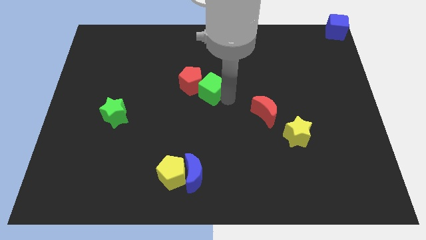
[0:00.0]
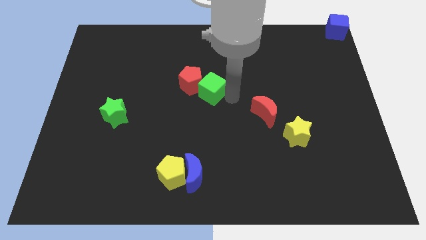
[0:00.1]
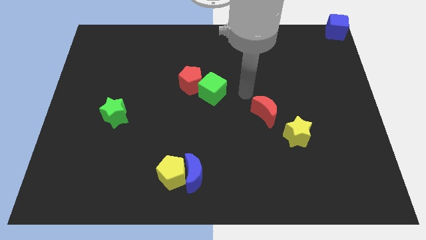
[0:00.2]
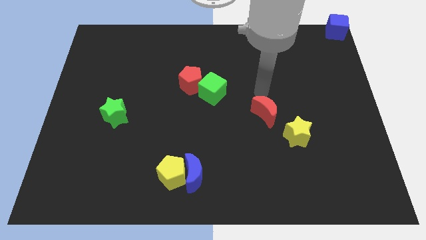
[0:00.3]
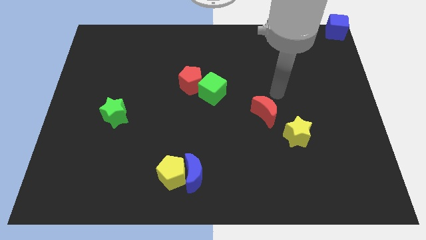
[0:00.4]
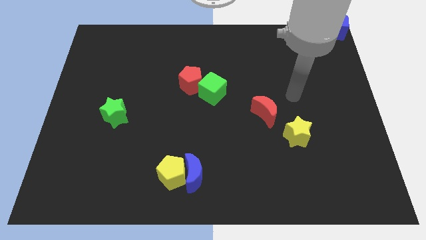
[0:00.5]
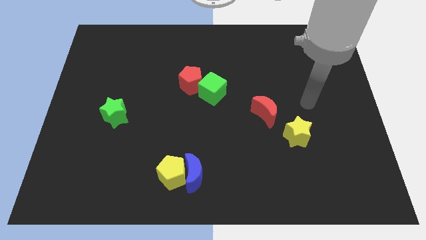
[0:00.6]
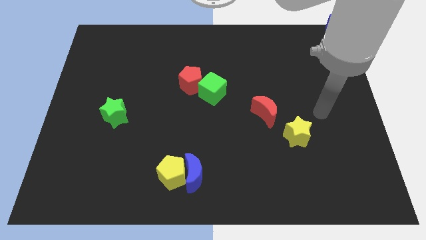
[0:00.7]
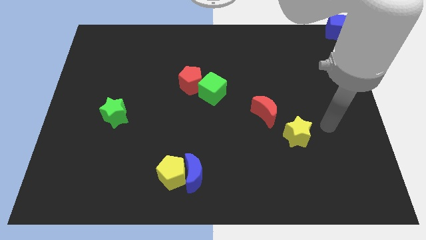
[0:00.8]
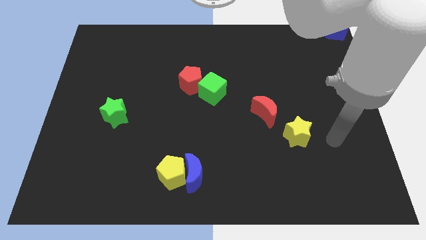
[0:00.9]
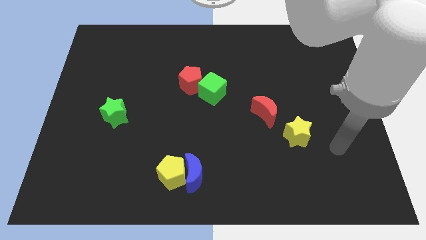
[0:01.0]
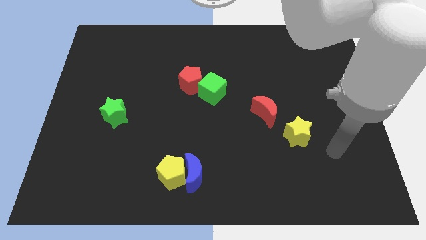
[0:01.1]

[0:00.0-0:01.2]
move your arm towards the bottom side of the board

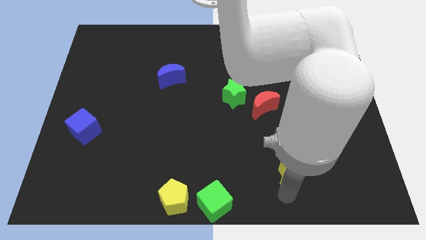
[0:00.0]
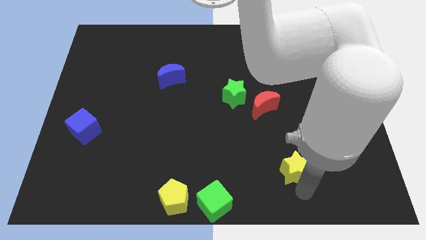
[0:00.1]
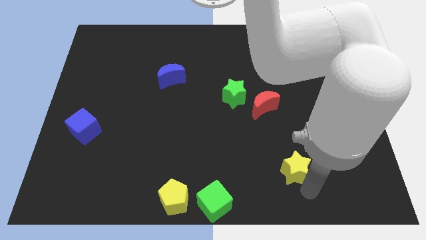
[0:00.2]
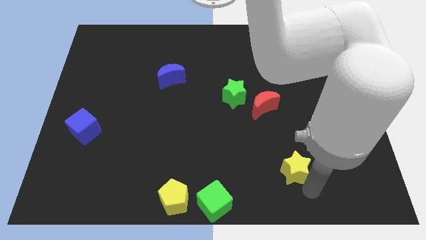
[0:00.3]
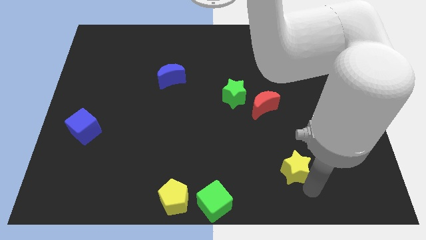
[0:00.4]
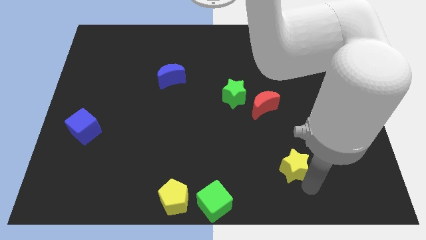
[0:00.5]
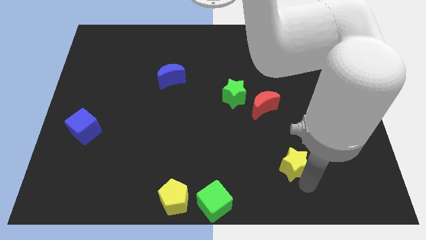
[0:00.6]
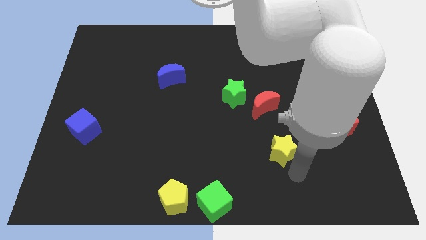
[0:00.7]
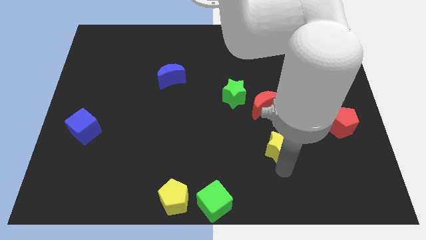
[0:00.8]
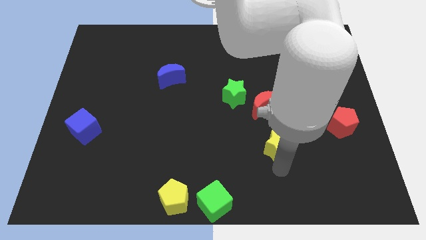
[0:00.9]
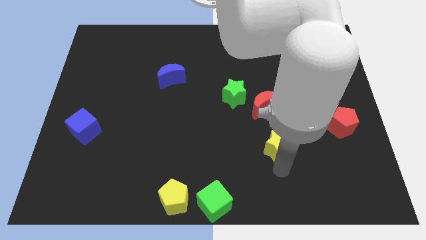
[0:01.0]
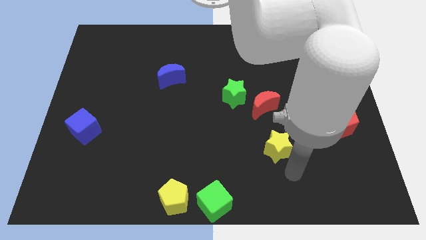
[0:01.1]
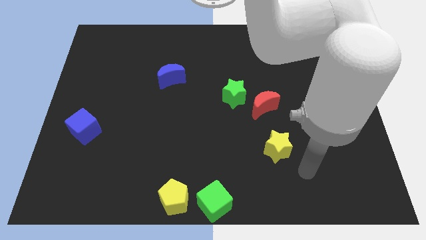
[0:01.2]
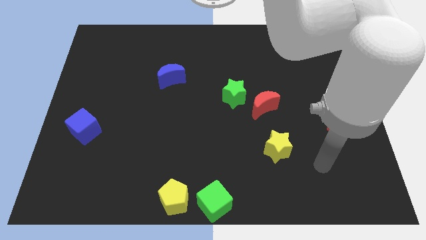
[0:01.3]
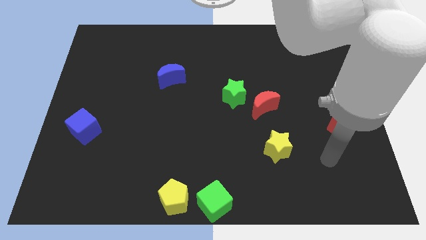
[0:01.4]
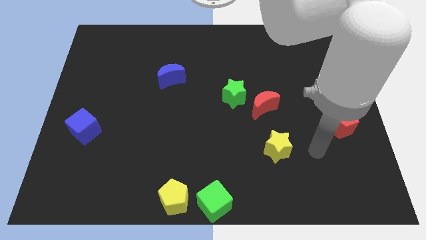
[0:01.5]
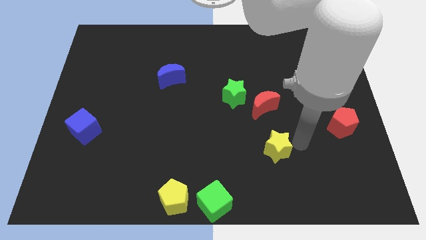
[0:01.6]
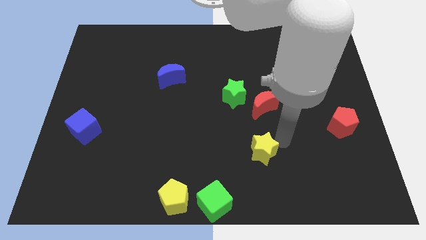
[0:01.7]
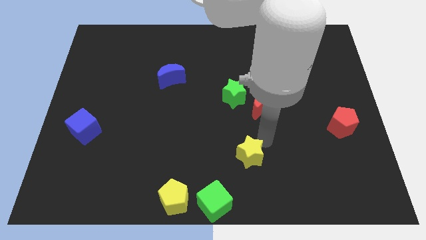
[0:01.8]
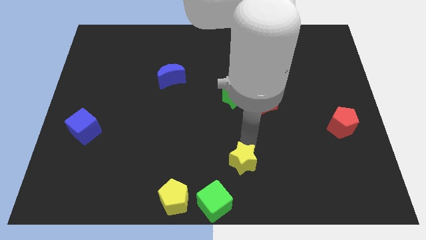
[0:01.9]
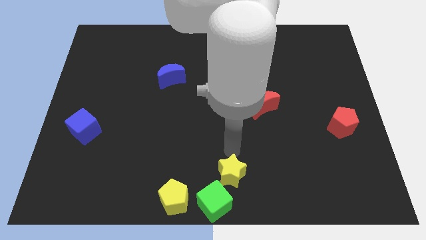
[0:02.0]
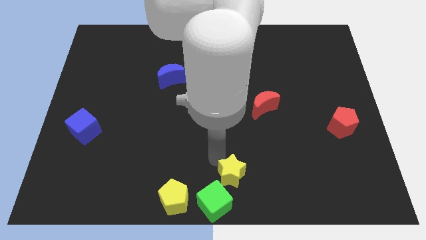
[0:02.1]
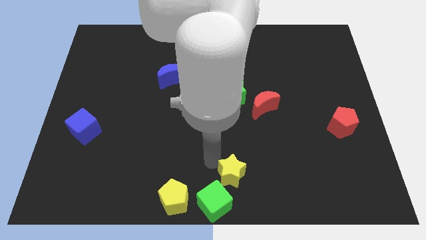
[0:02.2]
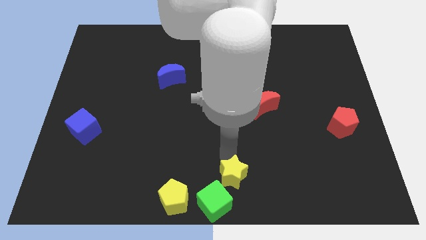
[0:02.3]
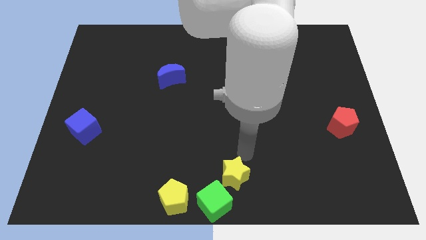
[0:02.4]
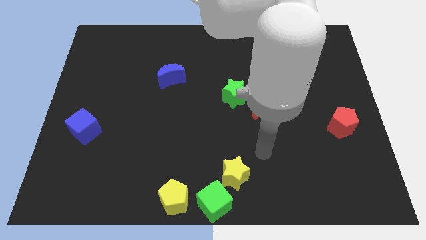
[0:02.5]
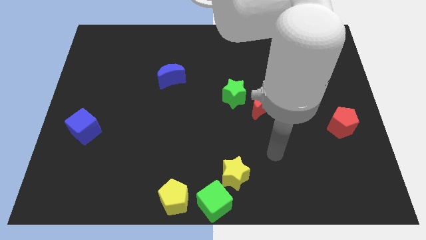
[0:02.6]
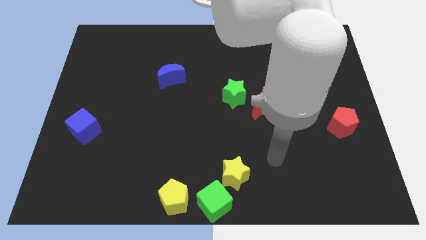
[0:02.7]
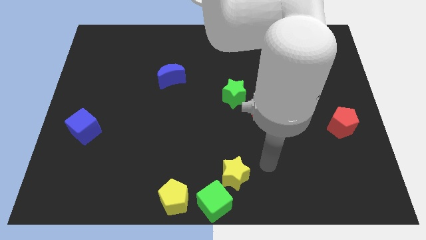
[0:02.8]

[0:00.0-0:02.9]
take the yellow star close to the green cube

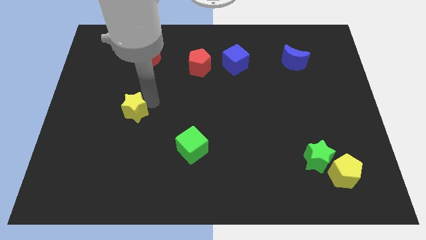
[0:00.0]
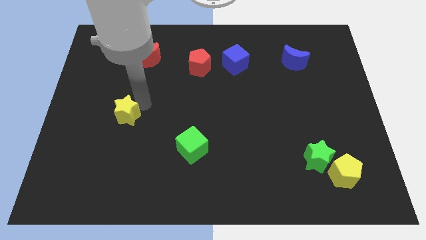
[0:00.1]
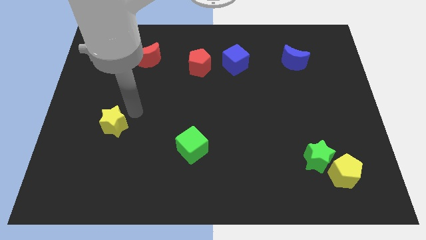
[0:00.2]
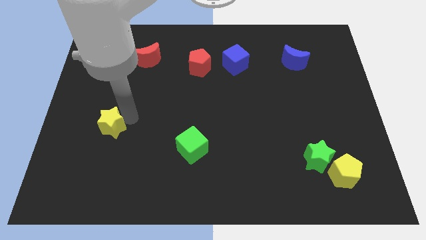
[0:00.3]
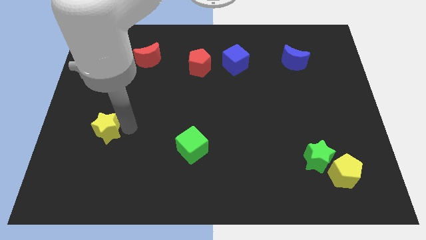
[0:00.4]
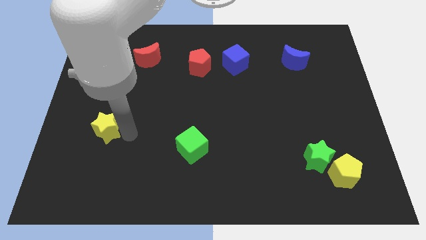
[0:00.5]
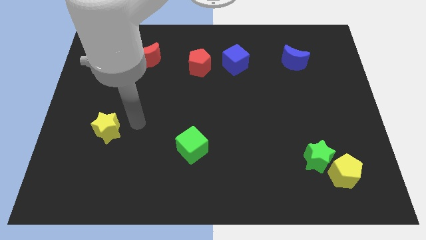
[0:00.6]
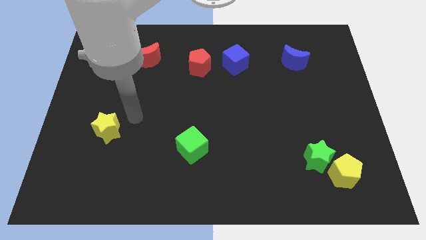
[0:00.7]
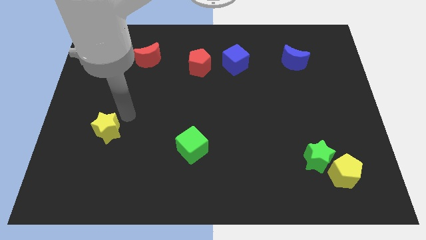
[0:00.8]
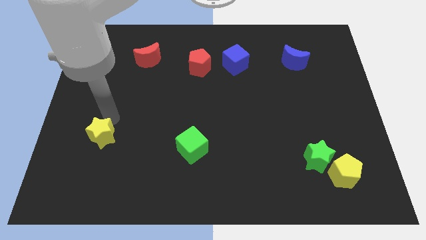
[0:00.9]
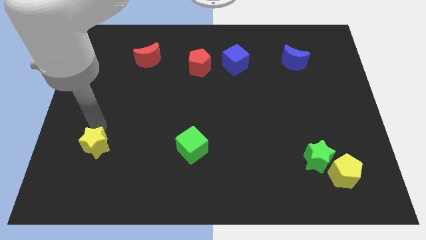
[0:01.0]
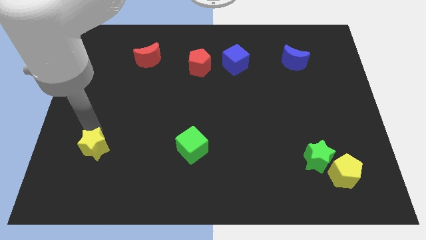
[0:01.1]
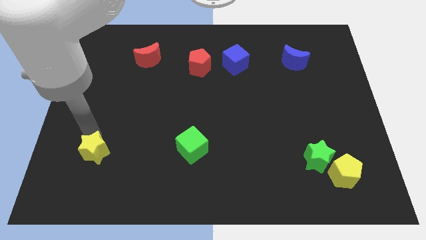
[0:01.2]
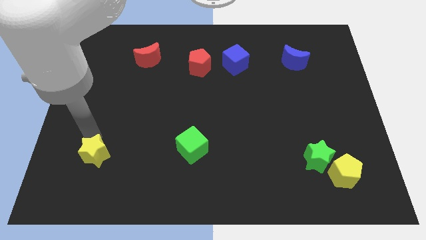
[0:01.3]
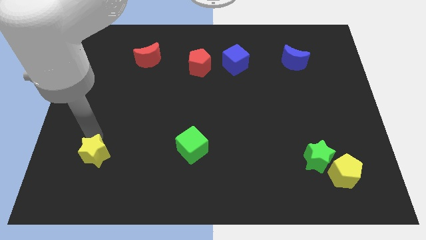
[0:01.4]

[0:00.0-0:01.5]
move yellow star left to the green cube

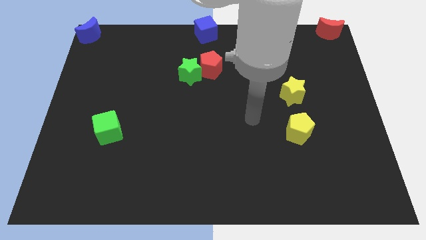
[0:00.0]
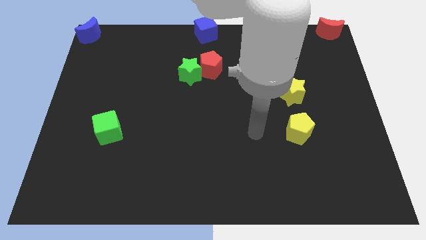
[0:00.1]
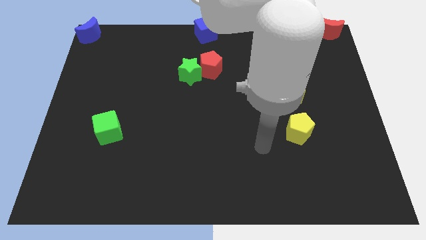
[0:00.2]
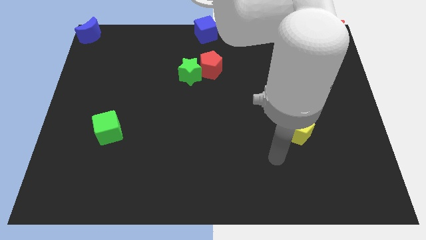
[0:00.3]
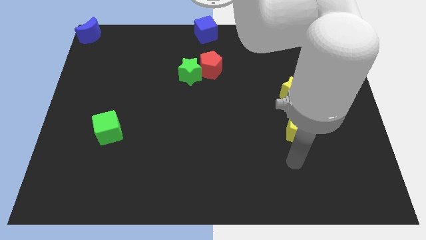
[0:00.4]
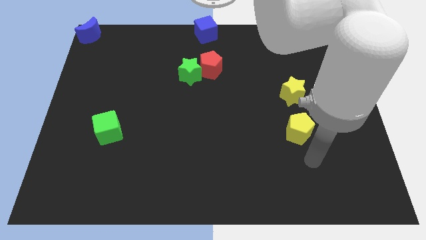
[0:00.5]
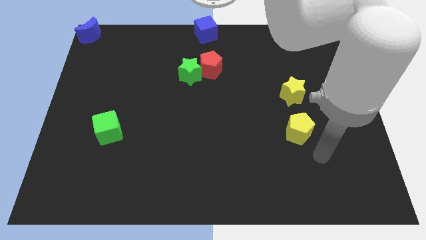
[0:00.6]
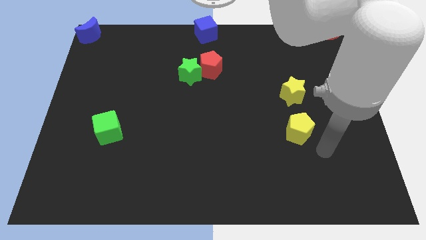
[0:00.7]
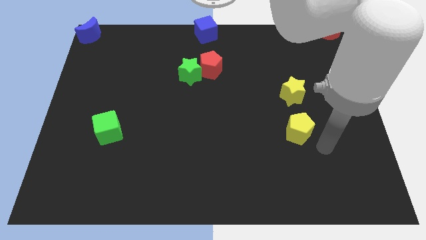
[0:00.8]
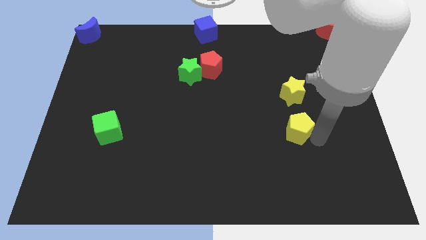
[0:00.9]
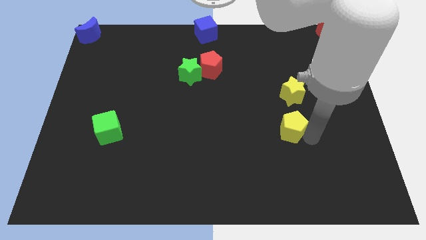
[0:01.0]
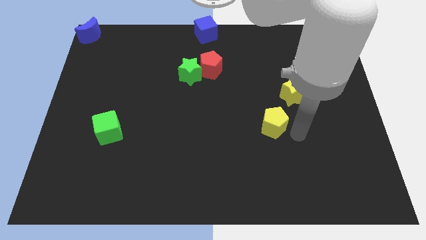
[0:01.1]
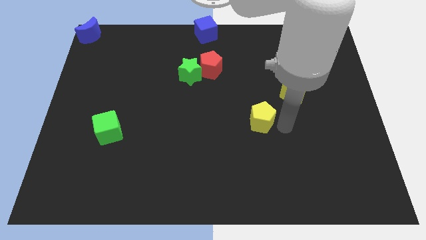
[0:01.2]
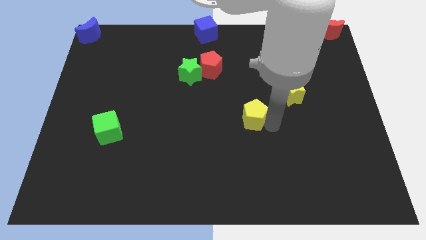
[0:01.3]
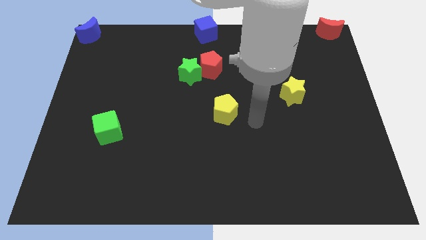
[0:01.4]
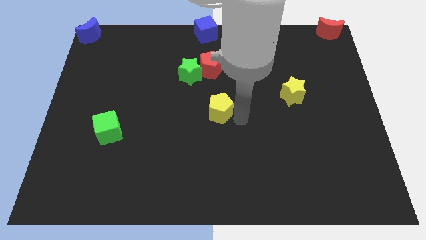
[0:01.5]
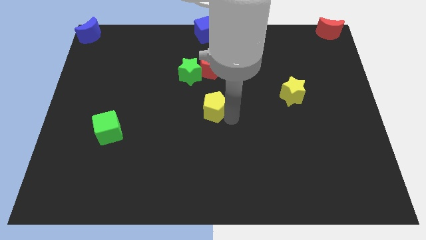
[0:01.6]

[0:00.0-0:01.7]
place the yellow pentagon below the red pentagon

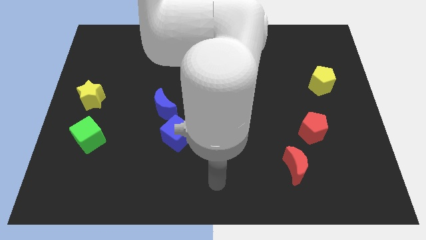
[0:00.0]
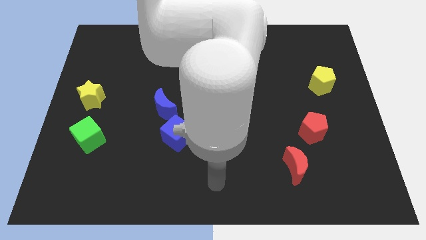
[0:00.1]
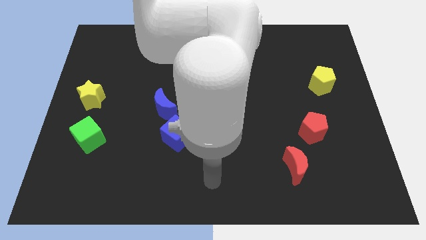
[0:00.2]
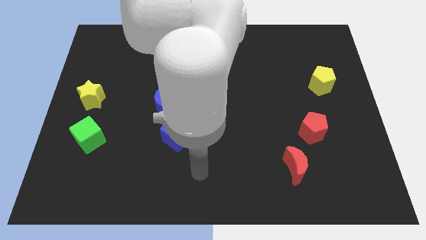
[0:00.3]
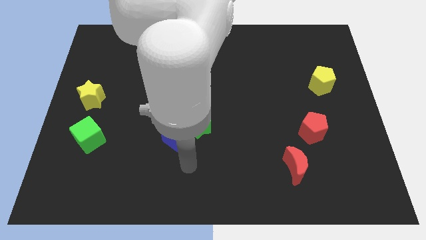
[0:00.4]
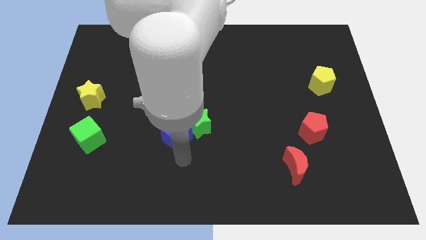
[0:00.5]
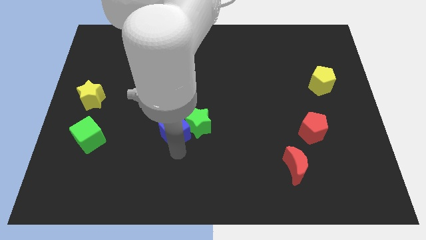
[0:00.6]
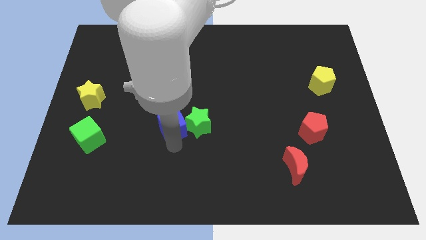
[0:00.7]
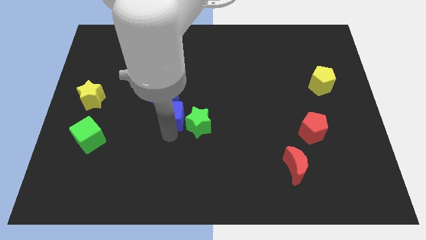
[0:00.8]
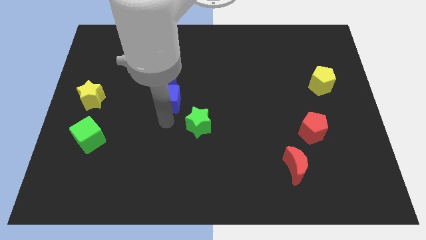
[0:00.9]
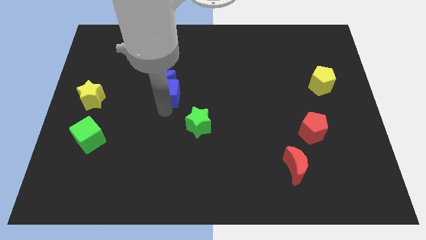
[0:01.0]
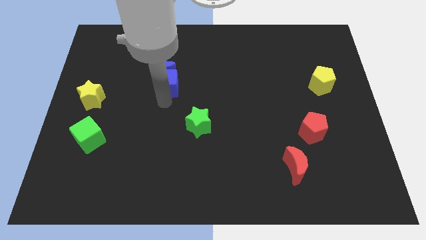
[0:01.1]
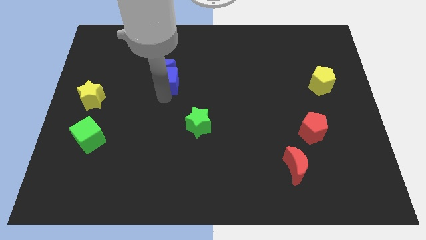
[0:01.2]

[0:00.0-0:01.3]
move the blue cube to the top center

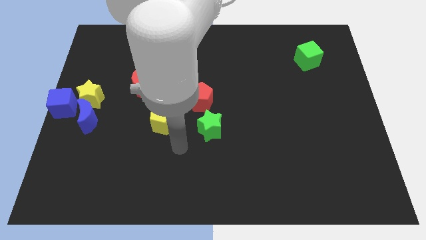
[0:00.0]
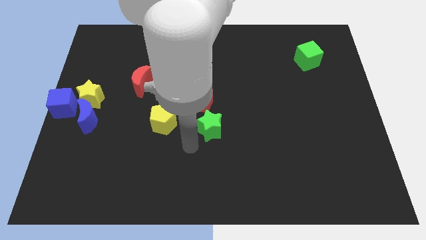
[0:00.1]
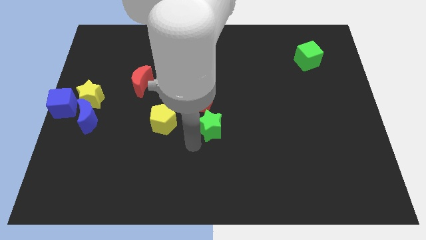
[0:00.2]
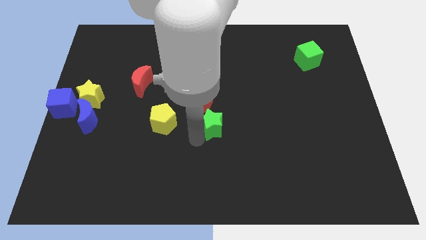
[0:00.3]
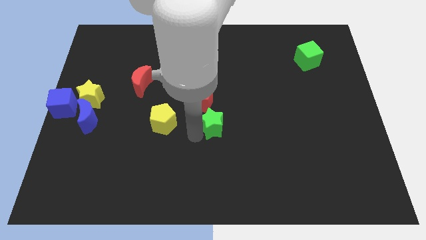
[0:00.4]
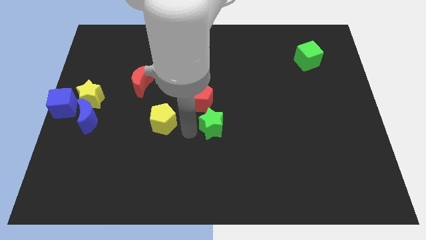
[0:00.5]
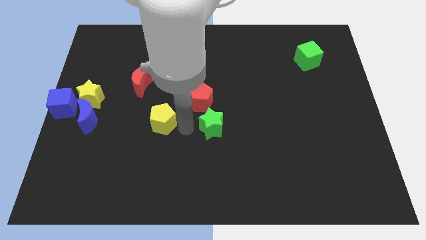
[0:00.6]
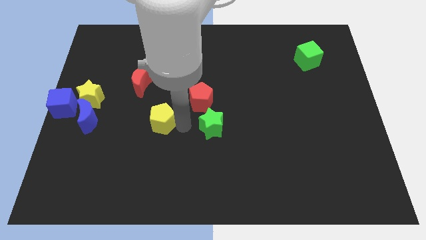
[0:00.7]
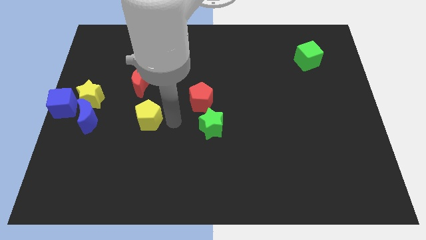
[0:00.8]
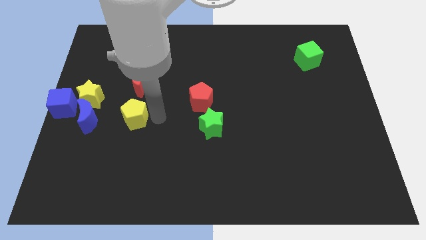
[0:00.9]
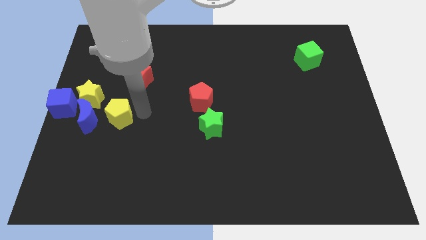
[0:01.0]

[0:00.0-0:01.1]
push yellow pentagon towards blue crescent
